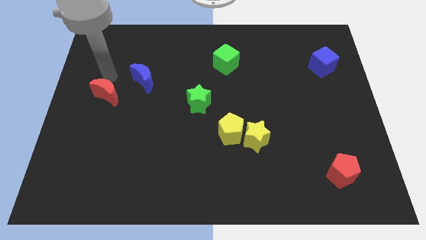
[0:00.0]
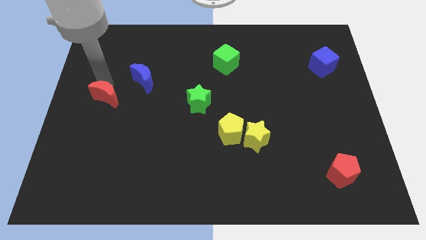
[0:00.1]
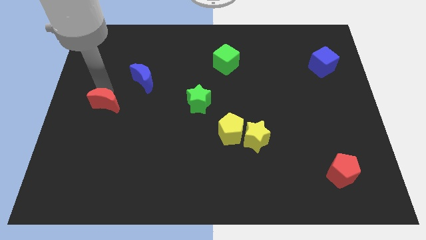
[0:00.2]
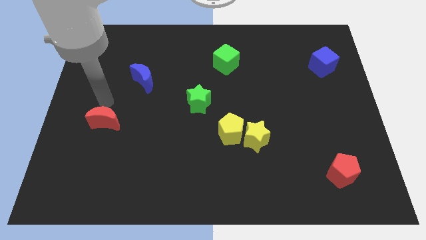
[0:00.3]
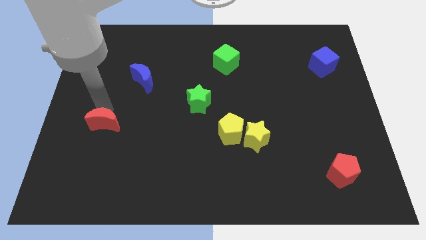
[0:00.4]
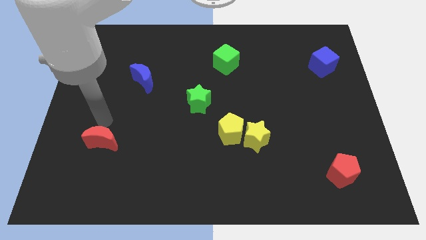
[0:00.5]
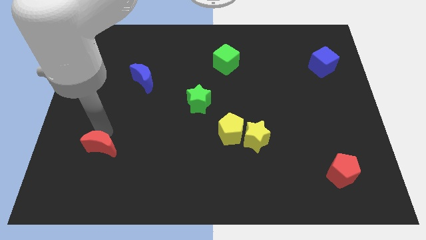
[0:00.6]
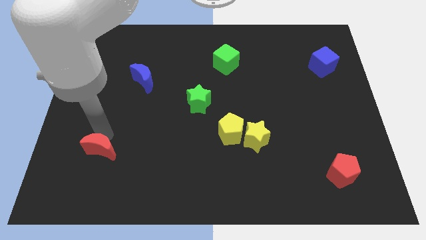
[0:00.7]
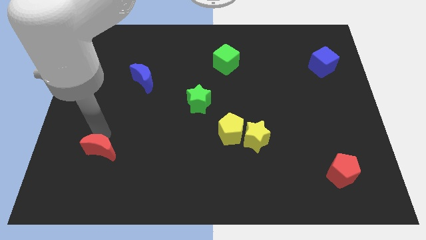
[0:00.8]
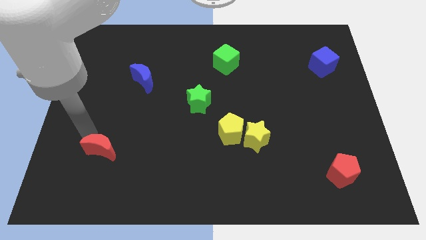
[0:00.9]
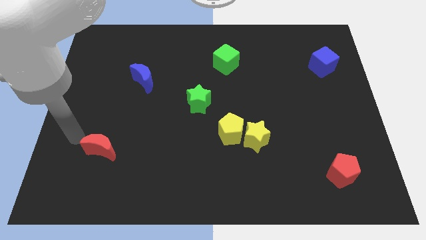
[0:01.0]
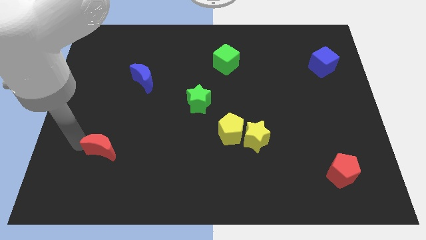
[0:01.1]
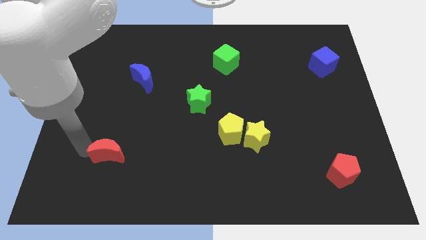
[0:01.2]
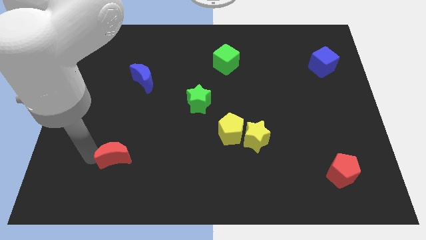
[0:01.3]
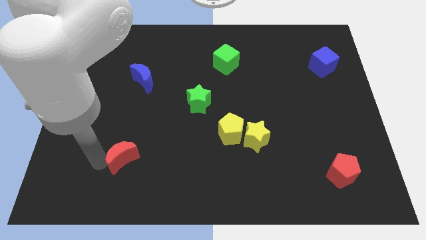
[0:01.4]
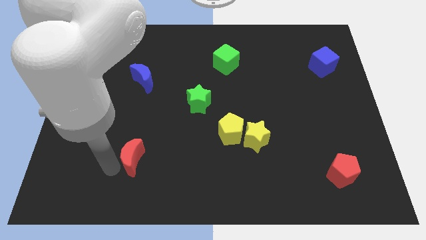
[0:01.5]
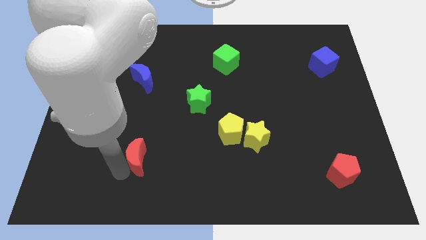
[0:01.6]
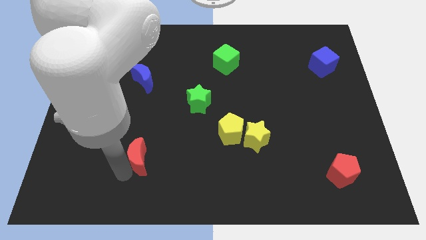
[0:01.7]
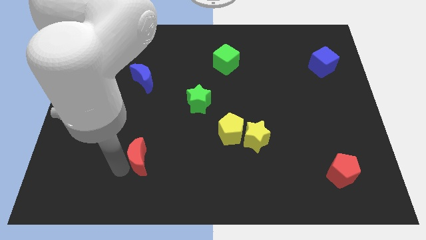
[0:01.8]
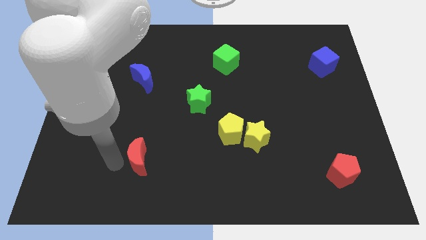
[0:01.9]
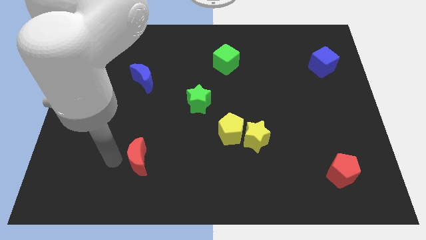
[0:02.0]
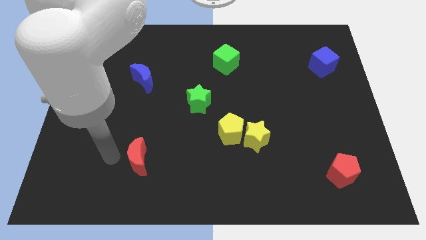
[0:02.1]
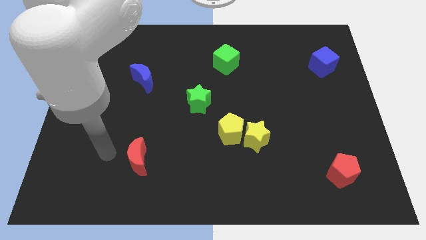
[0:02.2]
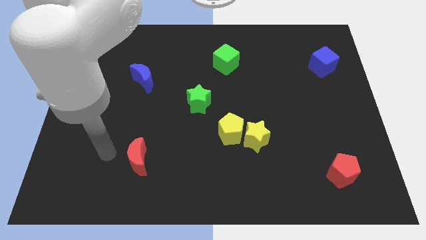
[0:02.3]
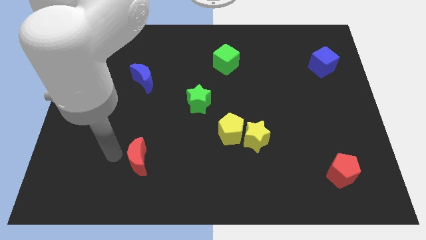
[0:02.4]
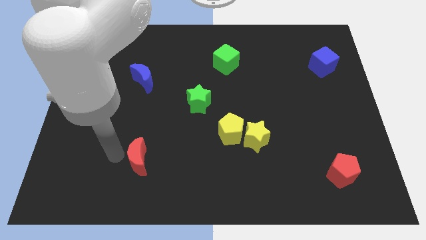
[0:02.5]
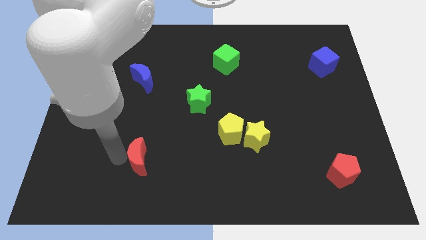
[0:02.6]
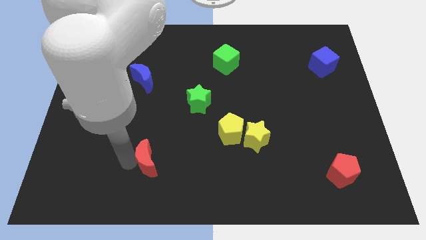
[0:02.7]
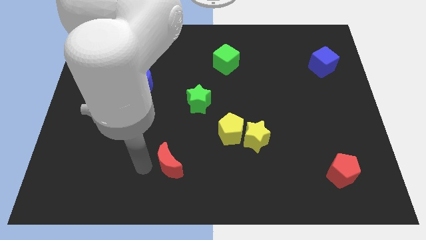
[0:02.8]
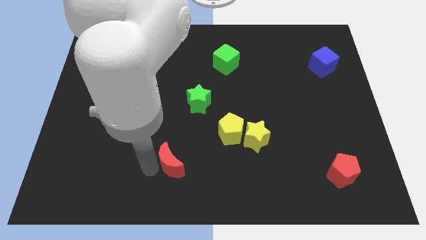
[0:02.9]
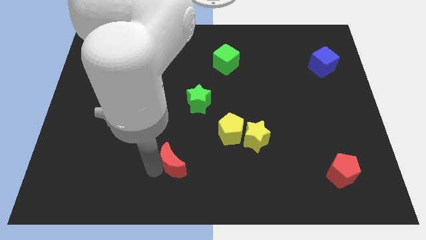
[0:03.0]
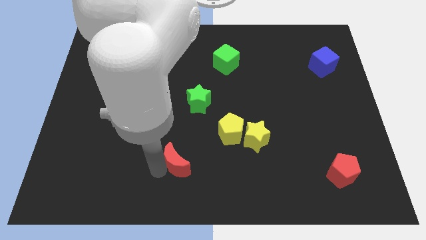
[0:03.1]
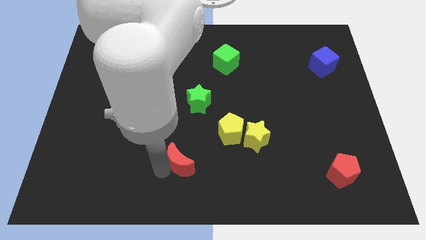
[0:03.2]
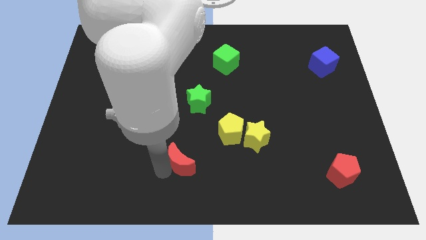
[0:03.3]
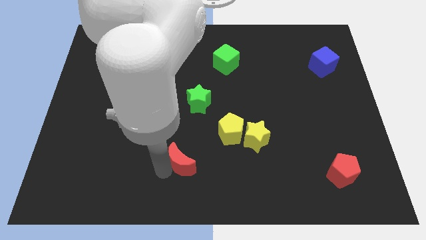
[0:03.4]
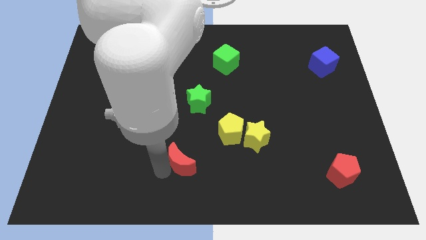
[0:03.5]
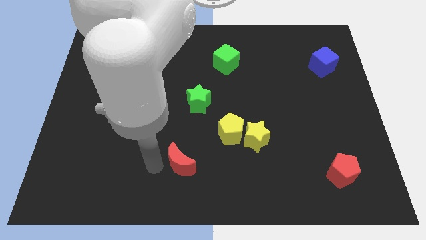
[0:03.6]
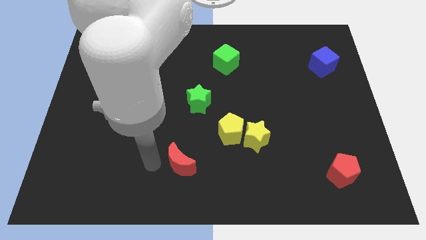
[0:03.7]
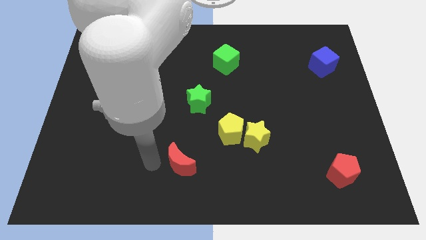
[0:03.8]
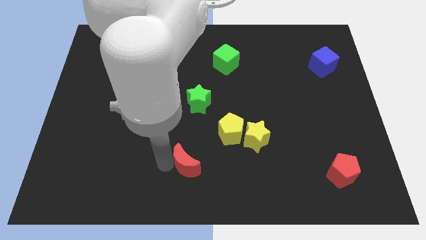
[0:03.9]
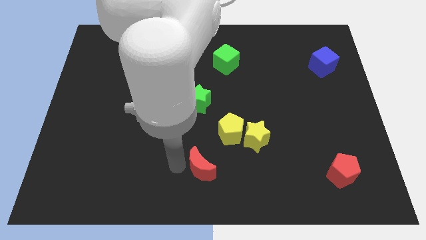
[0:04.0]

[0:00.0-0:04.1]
place the red moon vertically to the bottom side of the green star

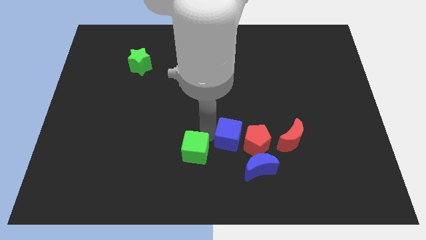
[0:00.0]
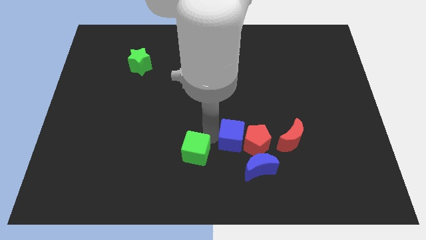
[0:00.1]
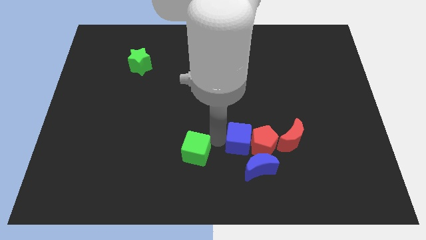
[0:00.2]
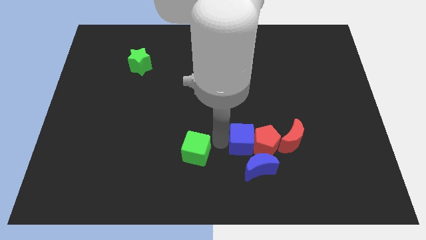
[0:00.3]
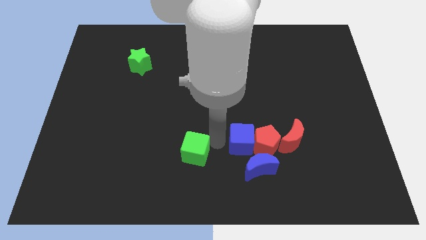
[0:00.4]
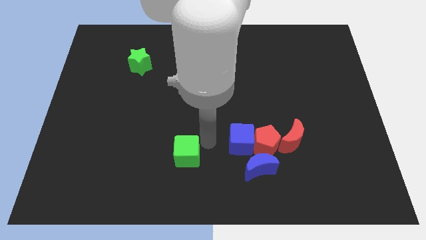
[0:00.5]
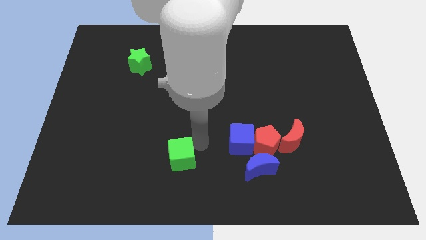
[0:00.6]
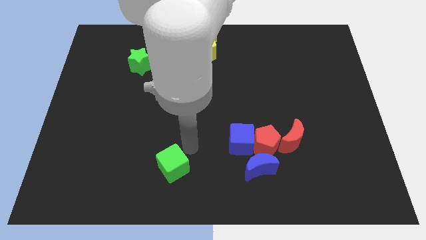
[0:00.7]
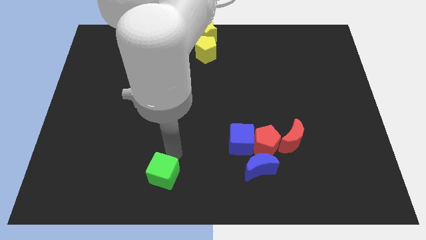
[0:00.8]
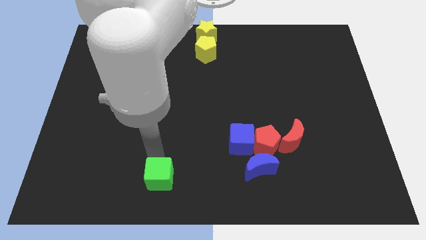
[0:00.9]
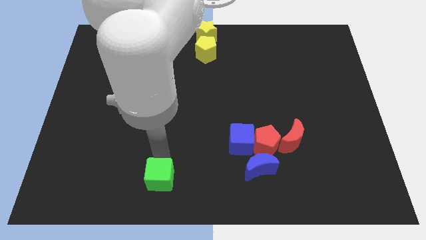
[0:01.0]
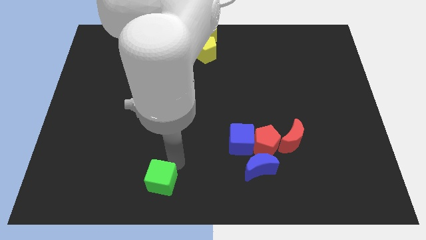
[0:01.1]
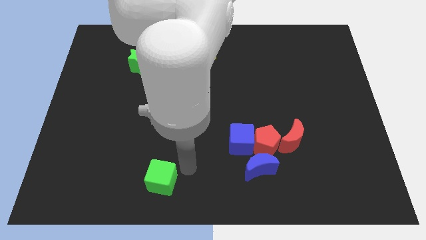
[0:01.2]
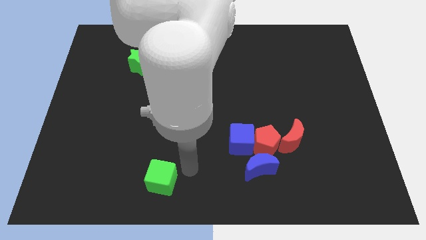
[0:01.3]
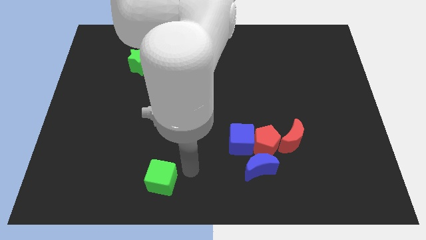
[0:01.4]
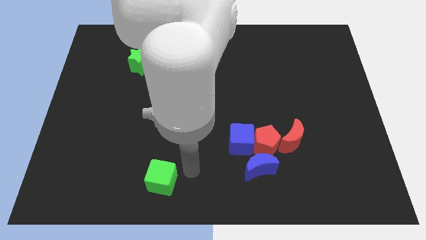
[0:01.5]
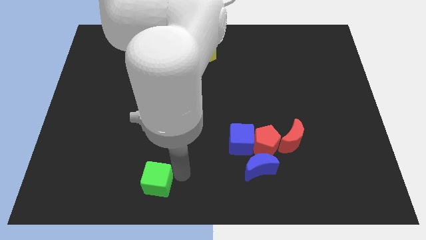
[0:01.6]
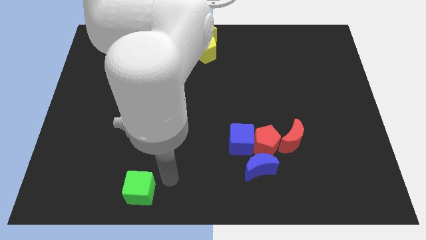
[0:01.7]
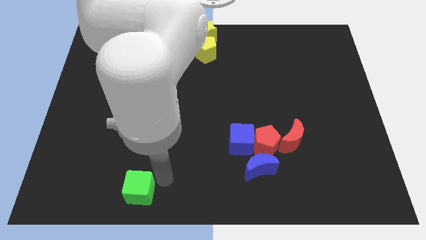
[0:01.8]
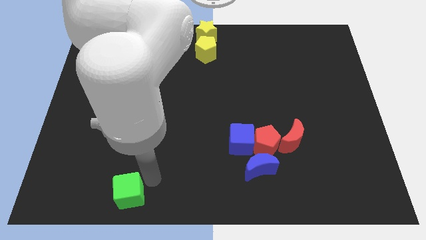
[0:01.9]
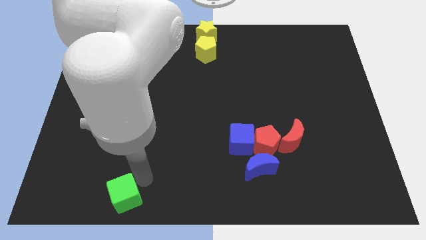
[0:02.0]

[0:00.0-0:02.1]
move the green cube away from the blue cube

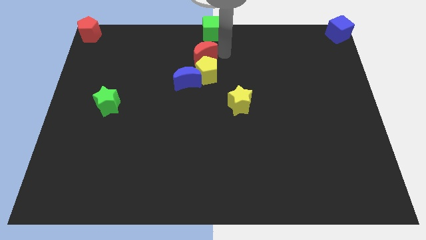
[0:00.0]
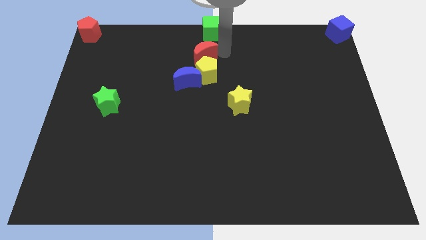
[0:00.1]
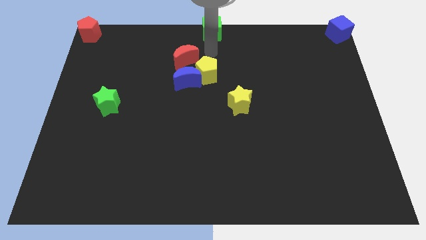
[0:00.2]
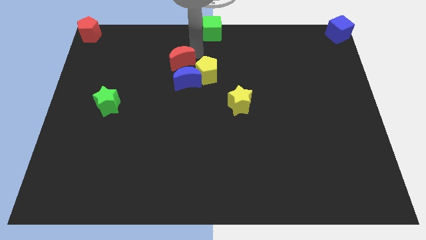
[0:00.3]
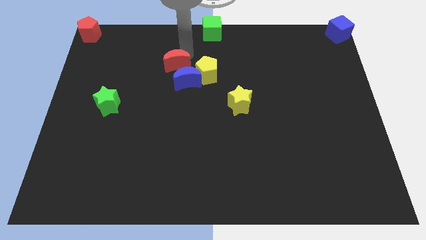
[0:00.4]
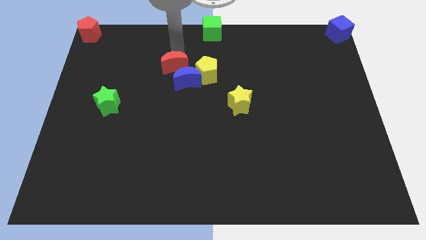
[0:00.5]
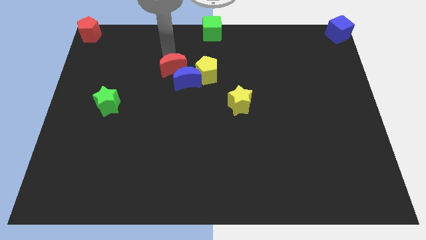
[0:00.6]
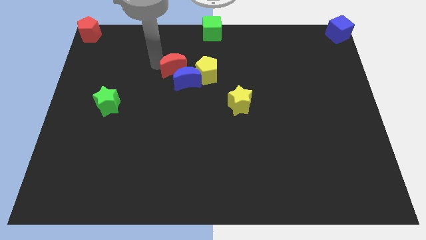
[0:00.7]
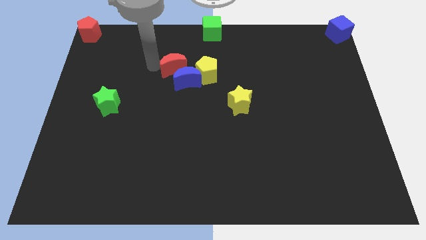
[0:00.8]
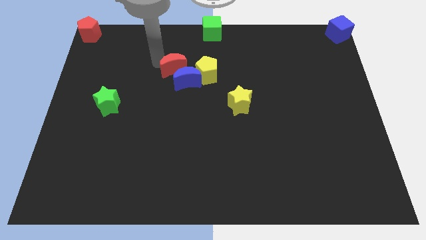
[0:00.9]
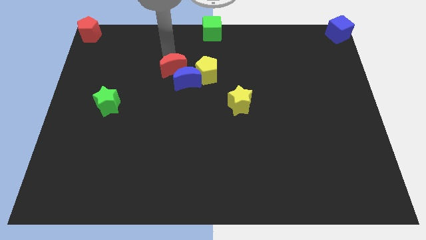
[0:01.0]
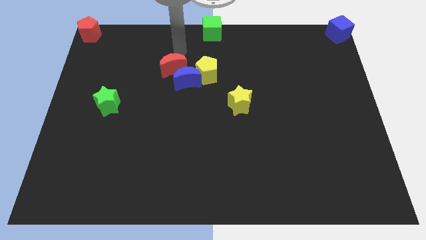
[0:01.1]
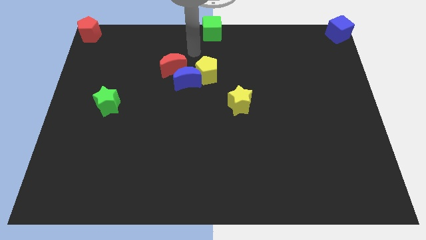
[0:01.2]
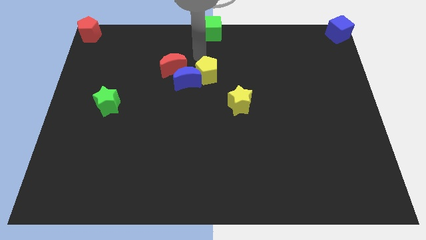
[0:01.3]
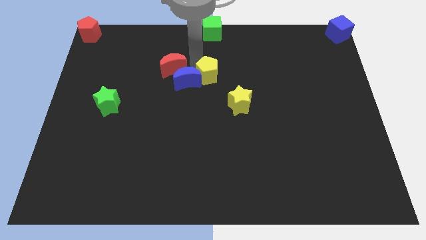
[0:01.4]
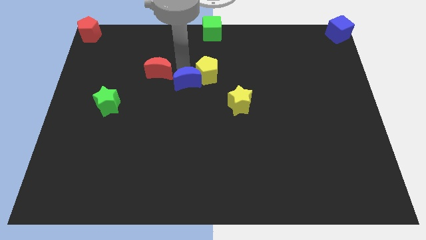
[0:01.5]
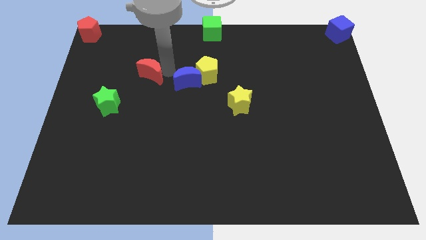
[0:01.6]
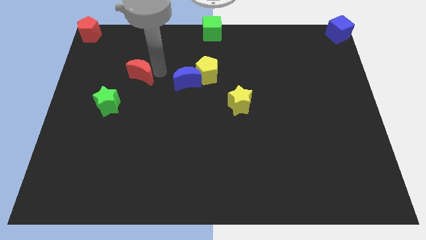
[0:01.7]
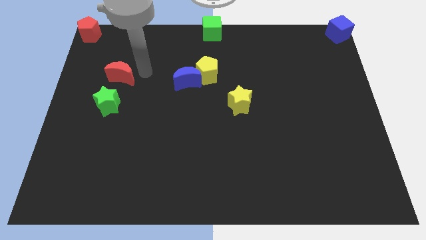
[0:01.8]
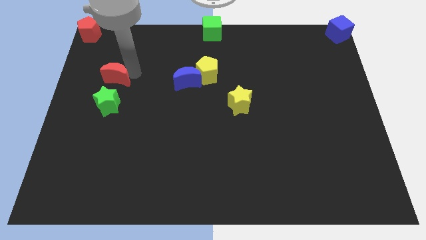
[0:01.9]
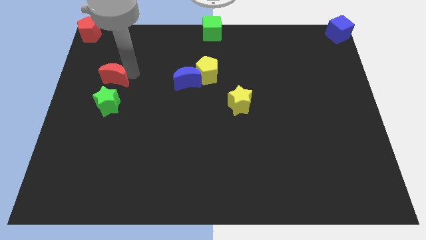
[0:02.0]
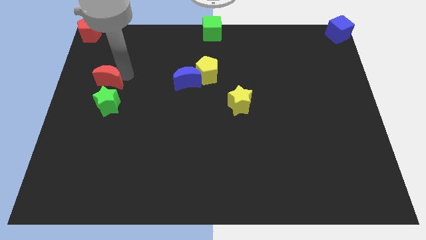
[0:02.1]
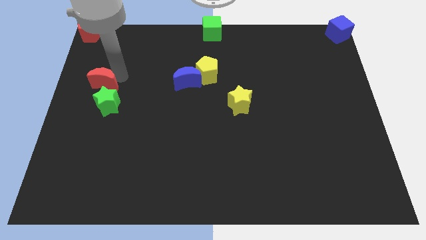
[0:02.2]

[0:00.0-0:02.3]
place the red moon above the green star

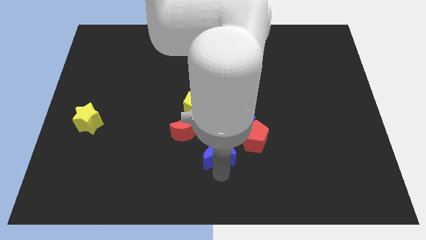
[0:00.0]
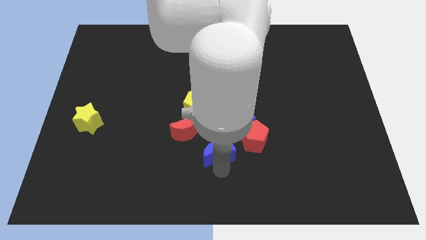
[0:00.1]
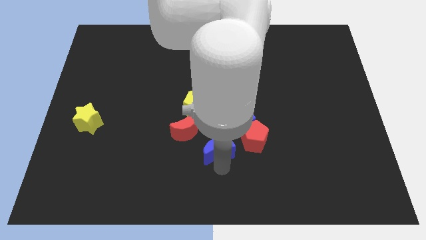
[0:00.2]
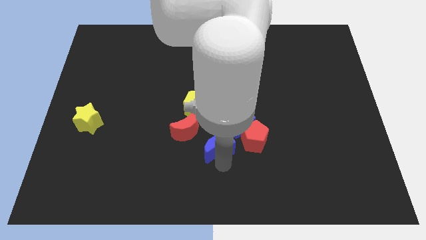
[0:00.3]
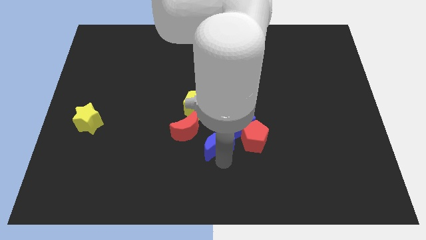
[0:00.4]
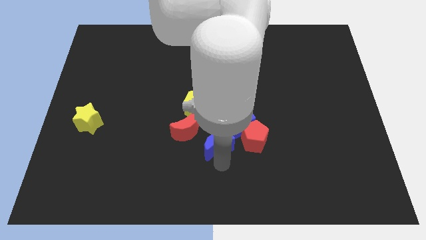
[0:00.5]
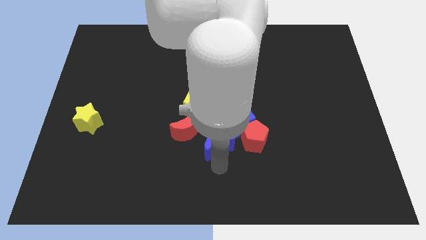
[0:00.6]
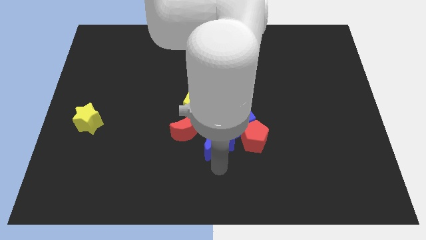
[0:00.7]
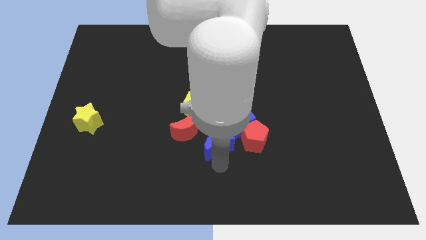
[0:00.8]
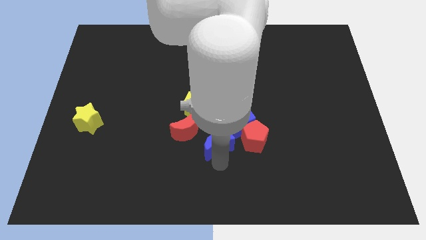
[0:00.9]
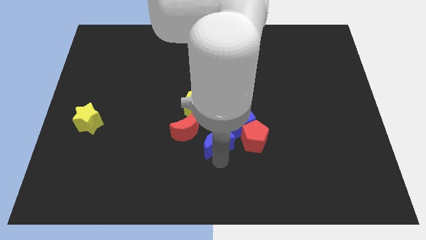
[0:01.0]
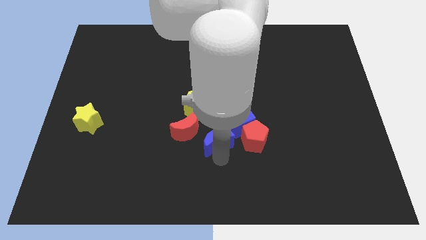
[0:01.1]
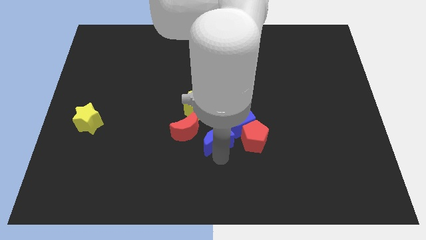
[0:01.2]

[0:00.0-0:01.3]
place the blue crescent close to the blue cube
